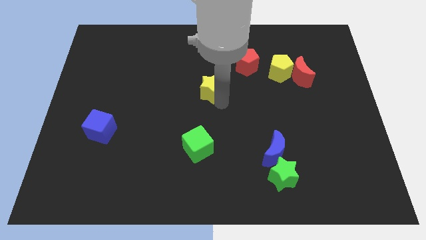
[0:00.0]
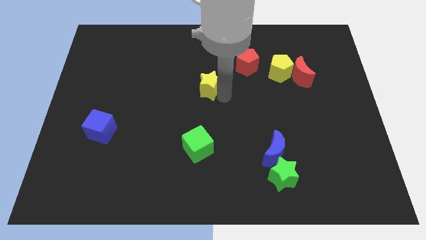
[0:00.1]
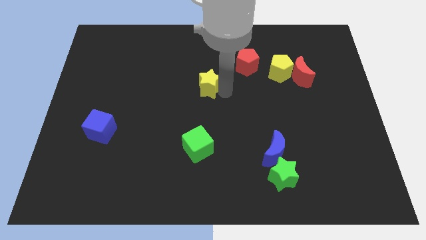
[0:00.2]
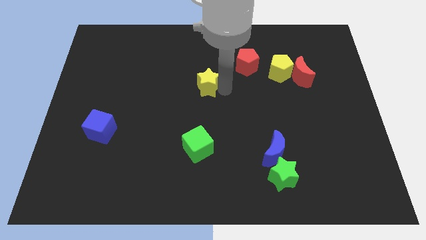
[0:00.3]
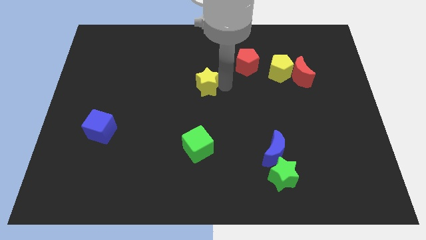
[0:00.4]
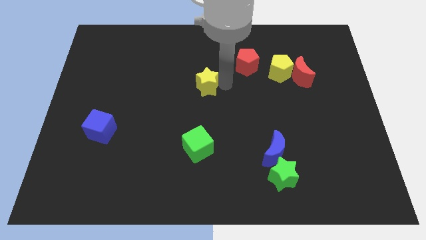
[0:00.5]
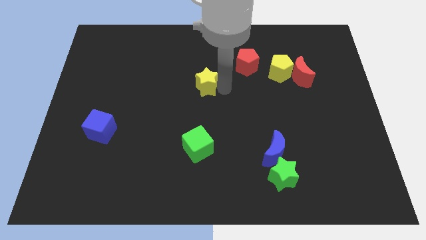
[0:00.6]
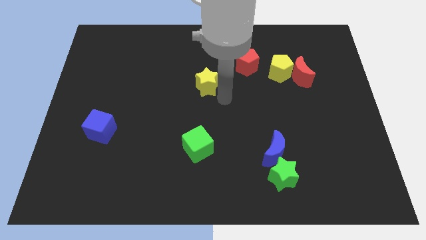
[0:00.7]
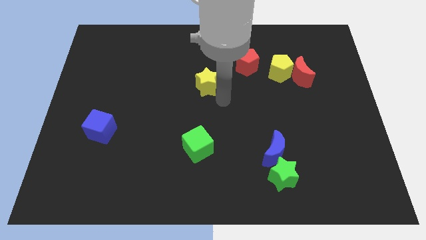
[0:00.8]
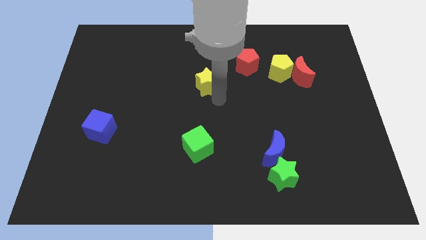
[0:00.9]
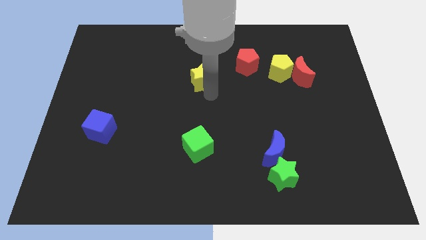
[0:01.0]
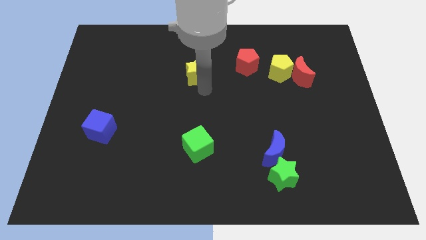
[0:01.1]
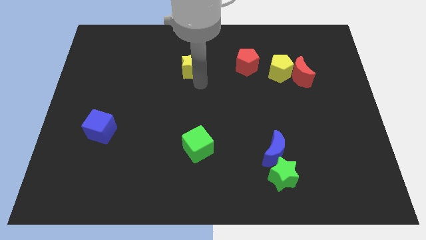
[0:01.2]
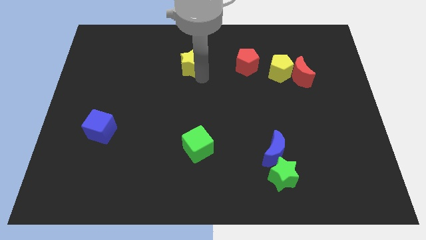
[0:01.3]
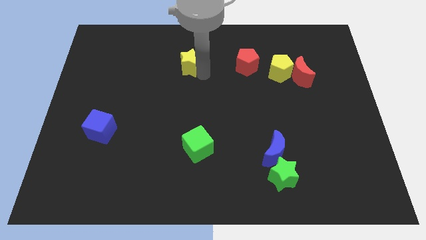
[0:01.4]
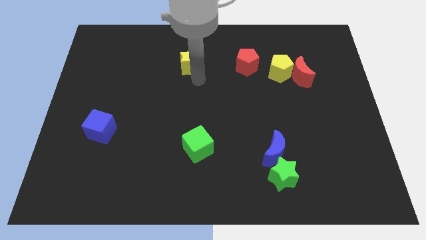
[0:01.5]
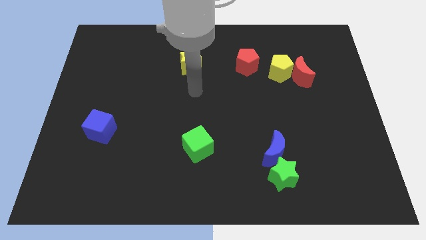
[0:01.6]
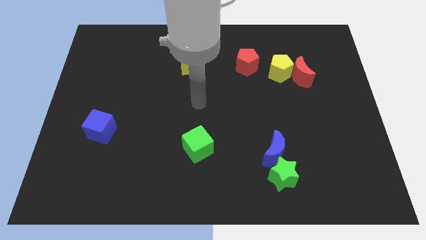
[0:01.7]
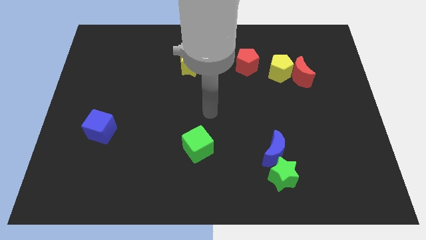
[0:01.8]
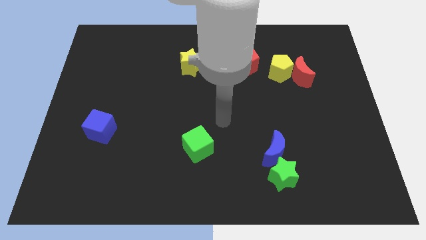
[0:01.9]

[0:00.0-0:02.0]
slide the yellow star towards the top center of the board

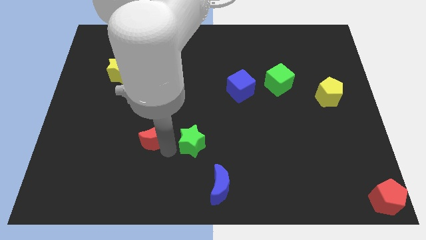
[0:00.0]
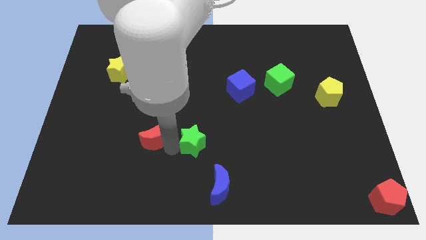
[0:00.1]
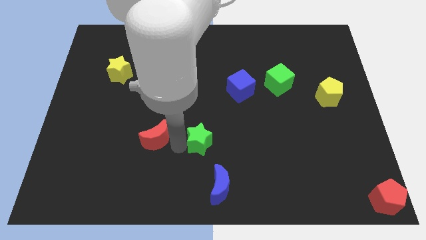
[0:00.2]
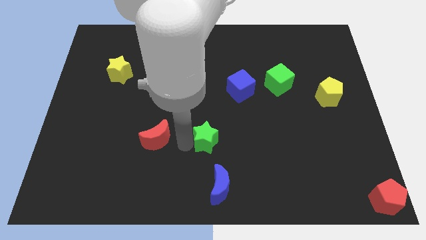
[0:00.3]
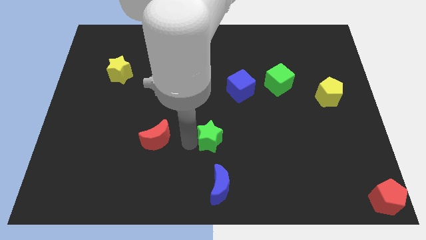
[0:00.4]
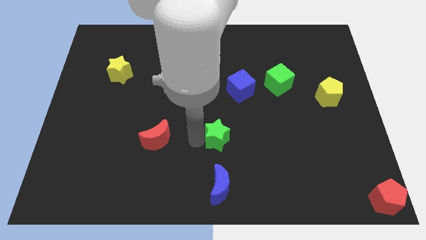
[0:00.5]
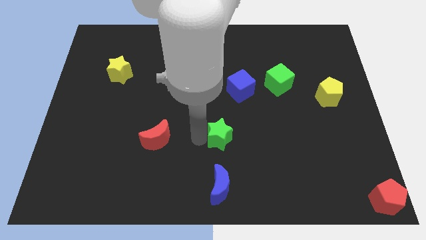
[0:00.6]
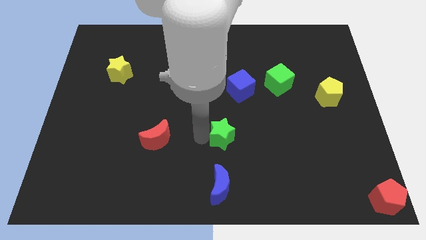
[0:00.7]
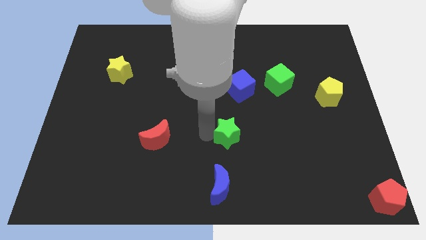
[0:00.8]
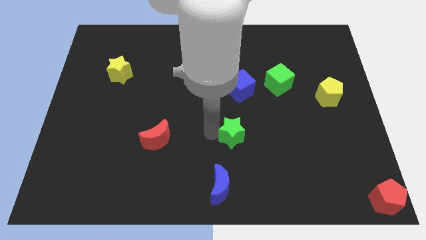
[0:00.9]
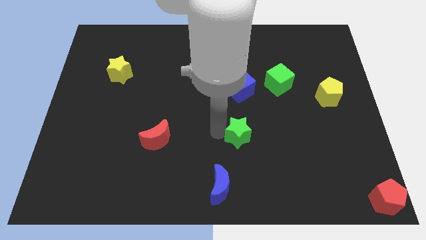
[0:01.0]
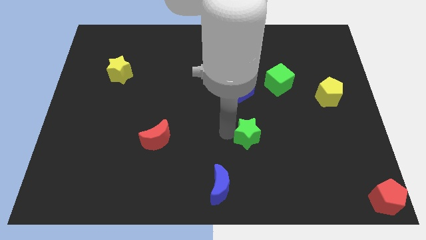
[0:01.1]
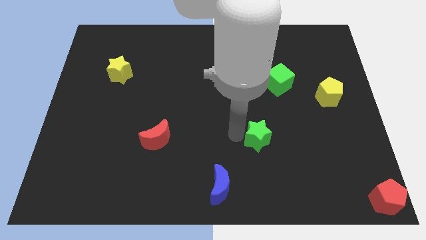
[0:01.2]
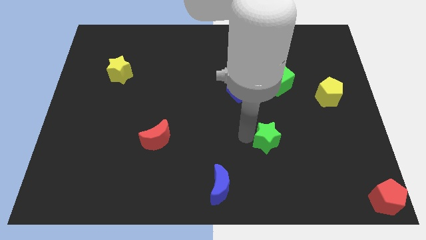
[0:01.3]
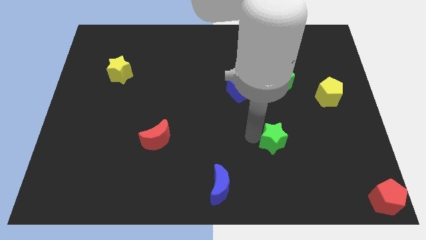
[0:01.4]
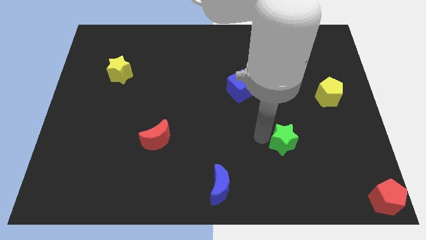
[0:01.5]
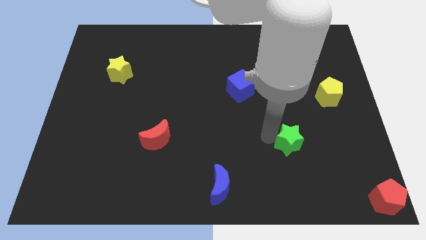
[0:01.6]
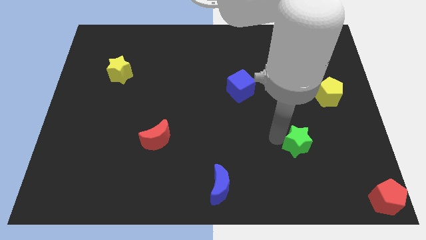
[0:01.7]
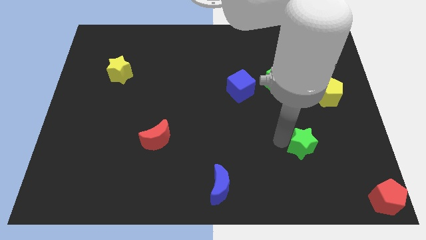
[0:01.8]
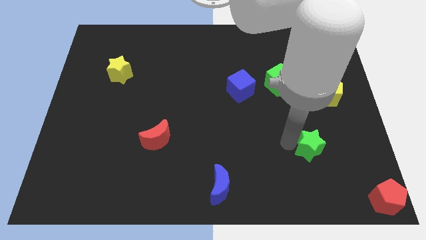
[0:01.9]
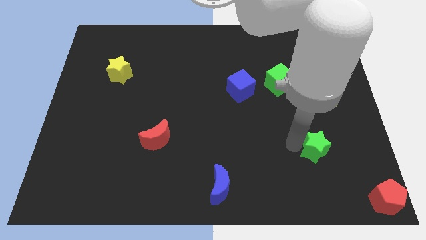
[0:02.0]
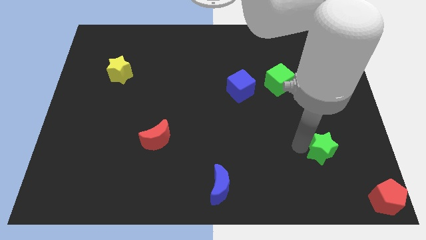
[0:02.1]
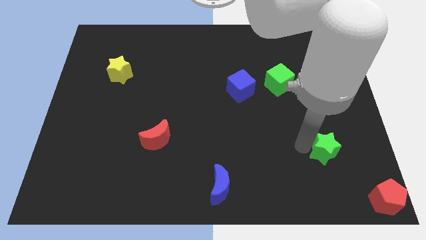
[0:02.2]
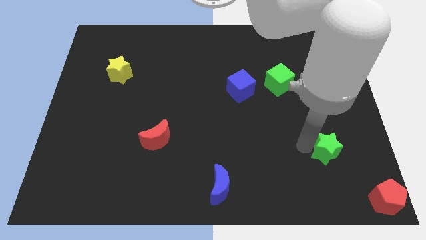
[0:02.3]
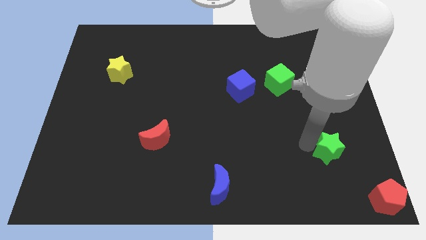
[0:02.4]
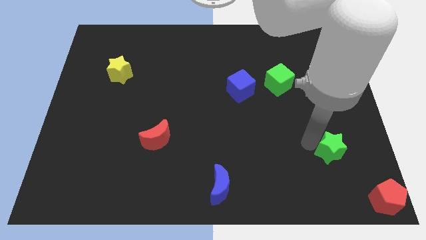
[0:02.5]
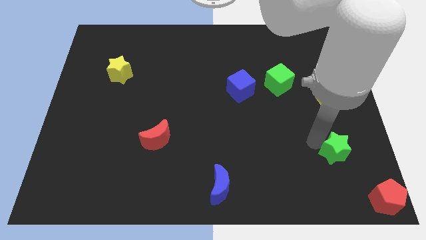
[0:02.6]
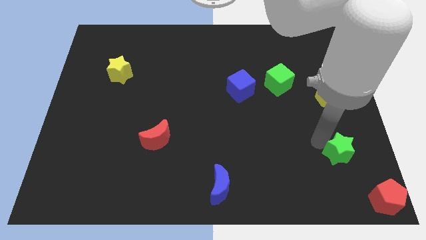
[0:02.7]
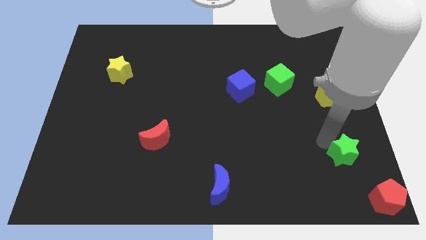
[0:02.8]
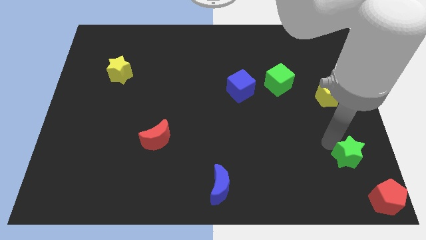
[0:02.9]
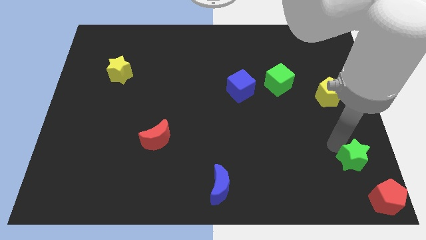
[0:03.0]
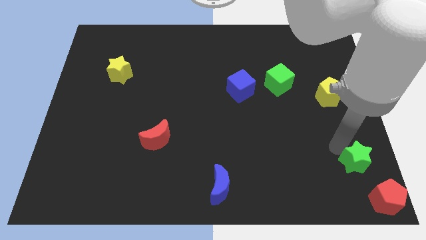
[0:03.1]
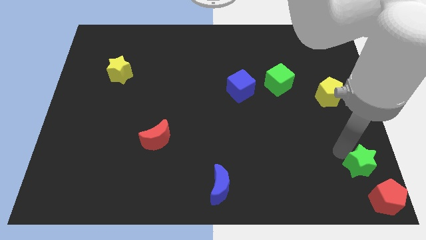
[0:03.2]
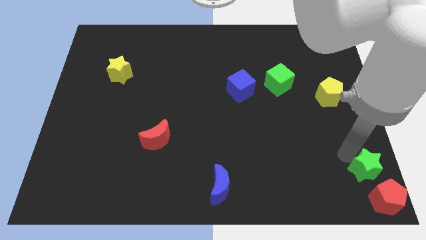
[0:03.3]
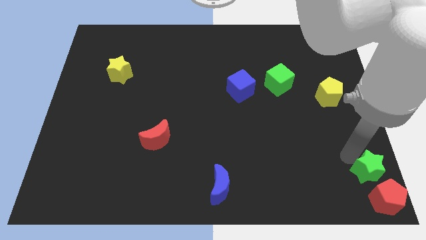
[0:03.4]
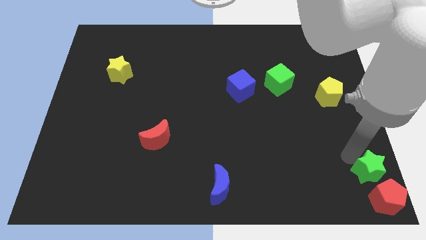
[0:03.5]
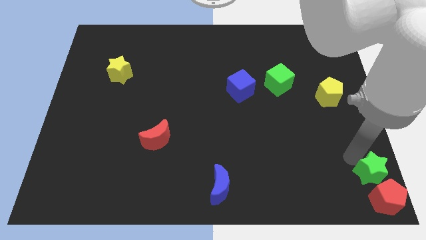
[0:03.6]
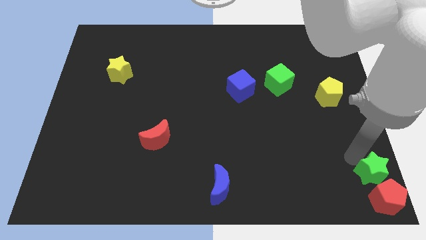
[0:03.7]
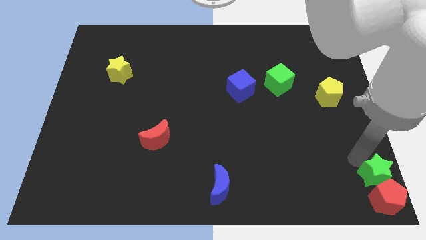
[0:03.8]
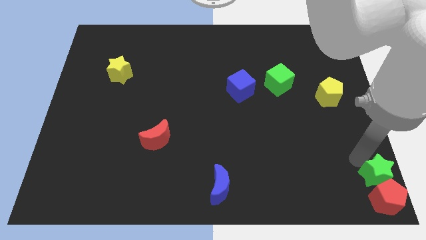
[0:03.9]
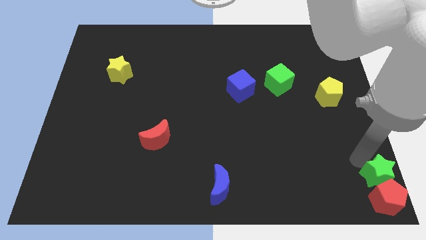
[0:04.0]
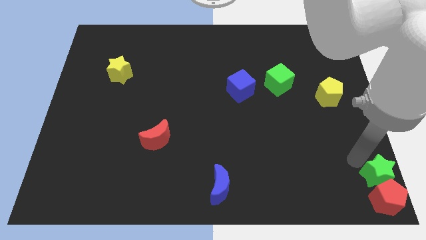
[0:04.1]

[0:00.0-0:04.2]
push the green star to the top of the red pentagon

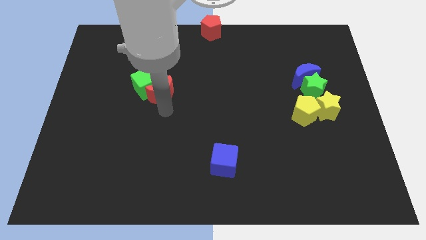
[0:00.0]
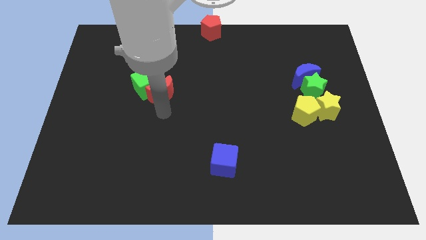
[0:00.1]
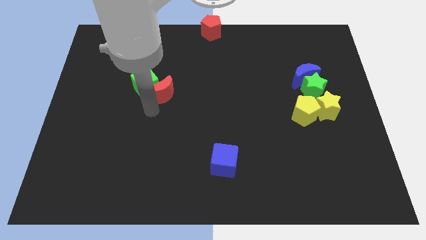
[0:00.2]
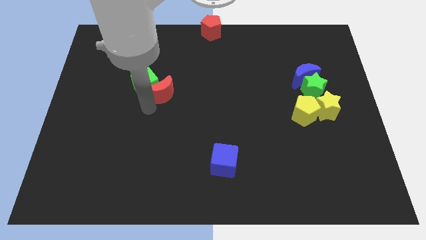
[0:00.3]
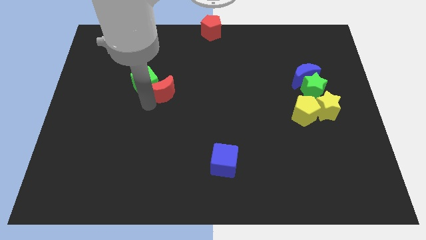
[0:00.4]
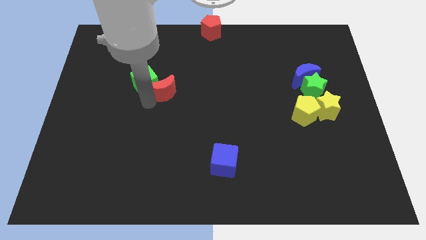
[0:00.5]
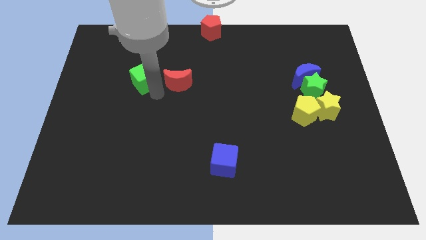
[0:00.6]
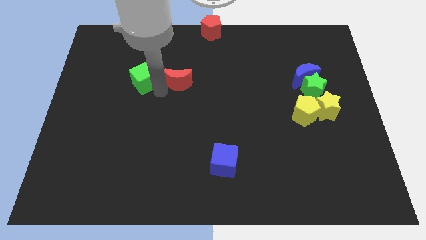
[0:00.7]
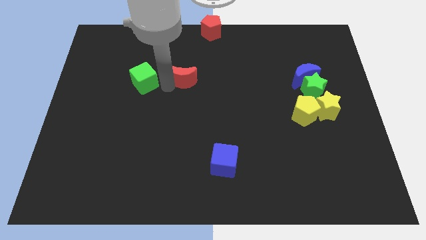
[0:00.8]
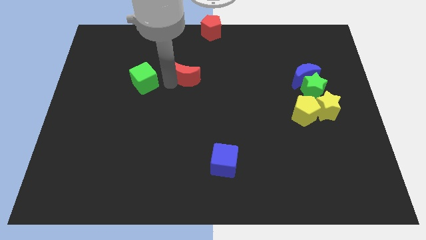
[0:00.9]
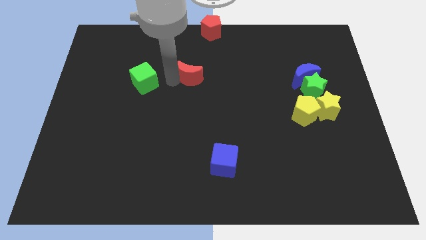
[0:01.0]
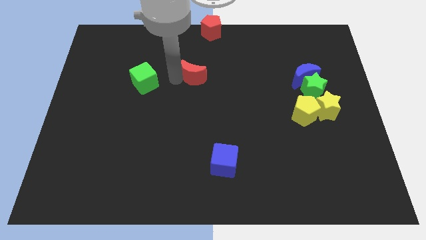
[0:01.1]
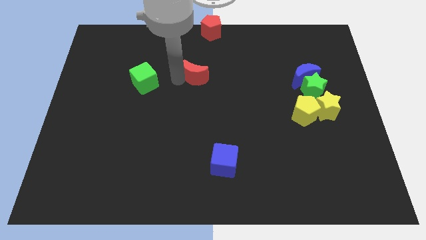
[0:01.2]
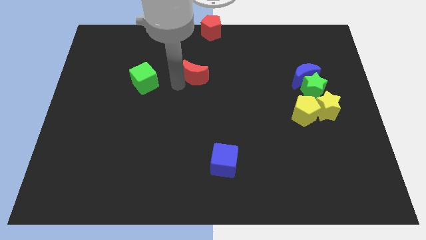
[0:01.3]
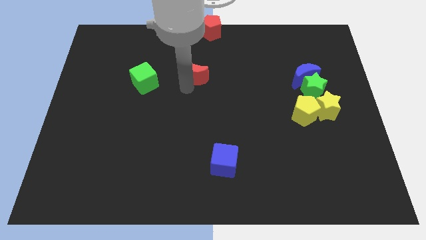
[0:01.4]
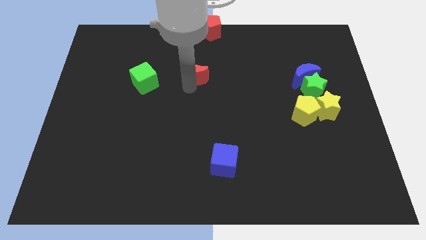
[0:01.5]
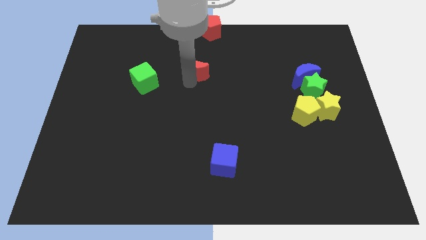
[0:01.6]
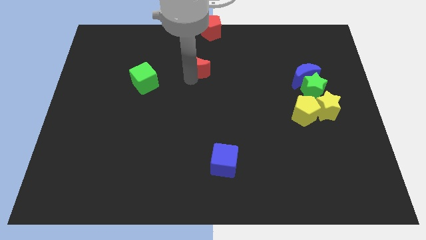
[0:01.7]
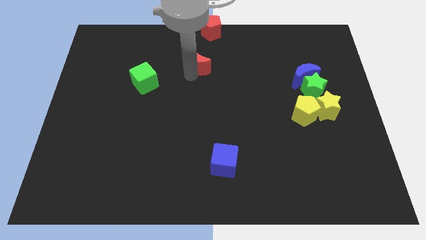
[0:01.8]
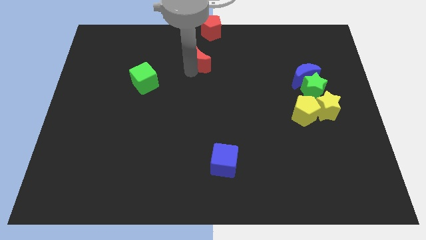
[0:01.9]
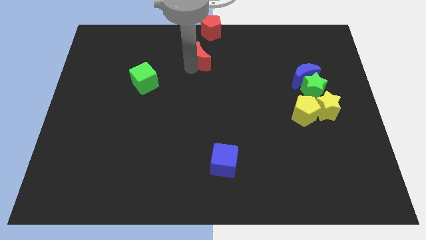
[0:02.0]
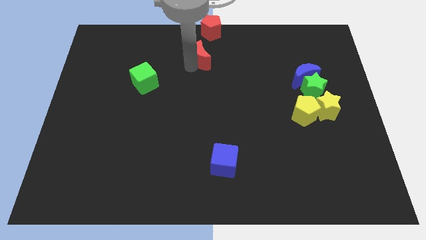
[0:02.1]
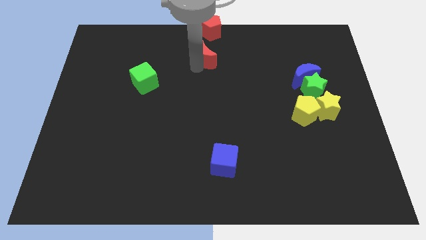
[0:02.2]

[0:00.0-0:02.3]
separate green cube and red moon

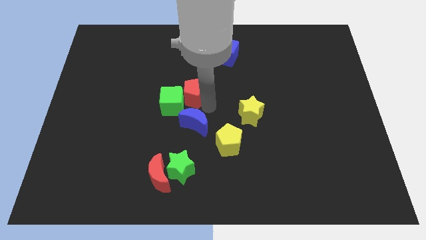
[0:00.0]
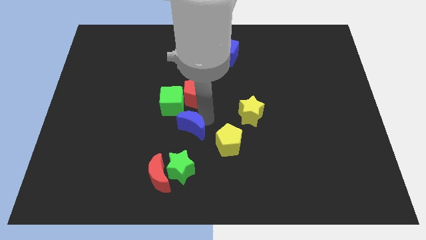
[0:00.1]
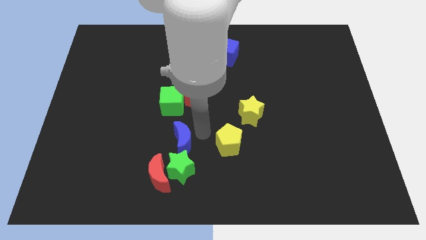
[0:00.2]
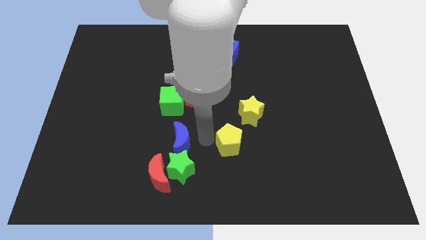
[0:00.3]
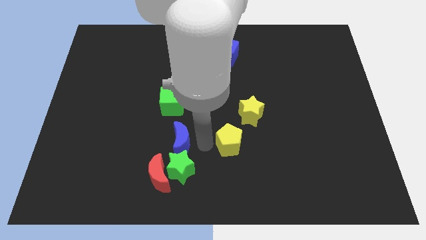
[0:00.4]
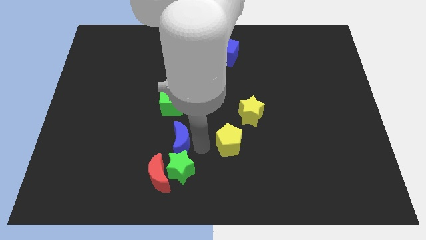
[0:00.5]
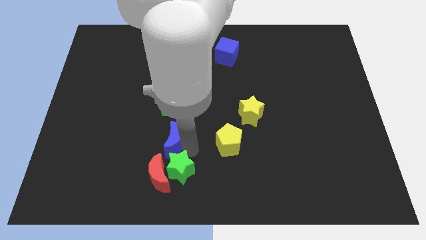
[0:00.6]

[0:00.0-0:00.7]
place the blue moon to the top of the green star
